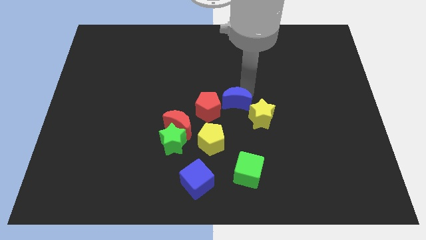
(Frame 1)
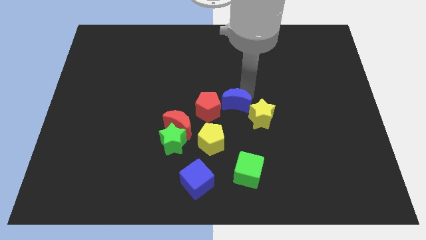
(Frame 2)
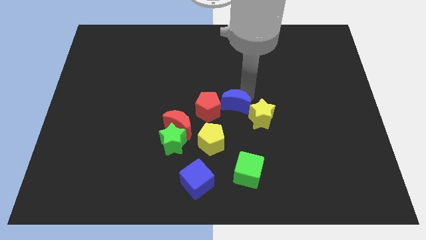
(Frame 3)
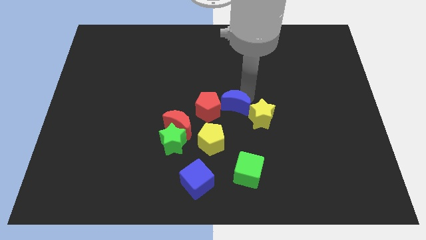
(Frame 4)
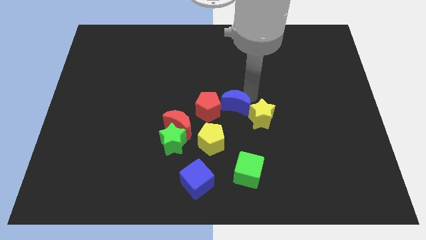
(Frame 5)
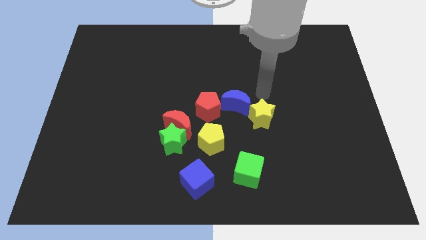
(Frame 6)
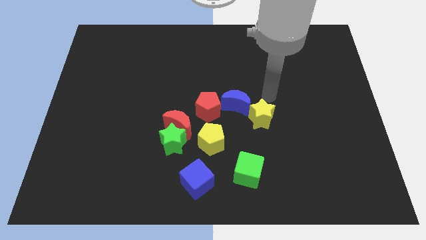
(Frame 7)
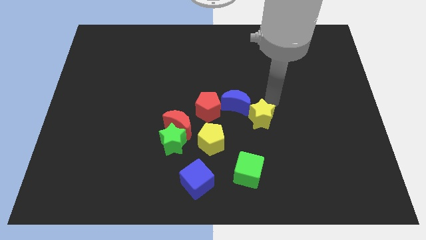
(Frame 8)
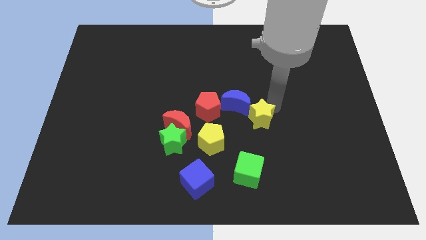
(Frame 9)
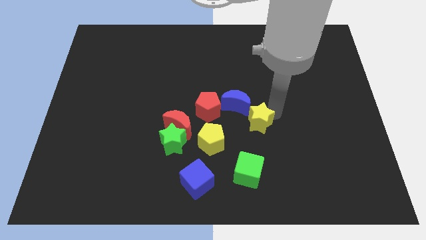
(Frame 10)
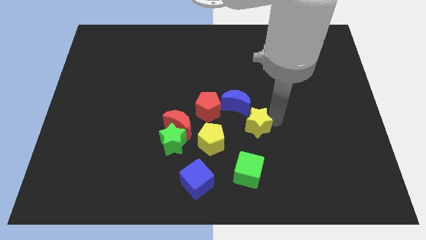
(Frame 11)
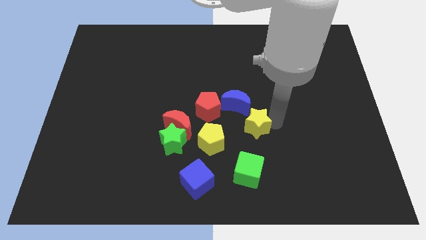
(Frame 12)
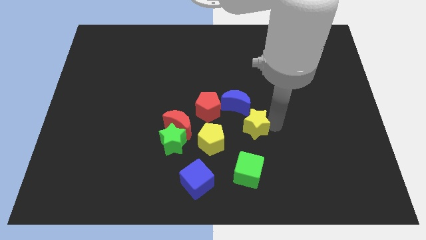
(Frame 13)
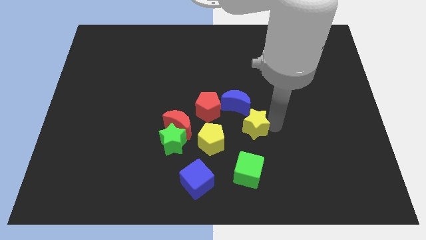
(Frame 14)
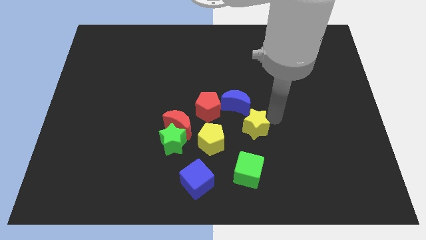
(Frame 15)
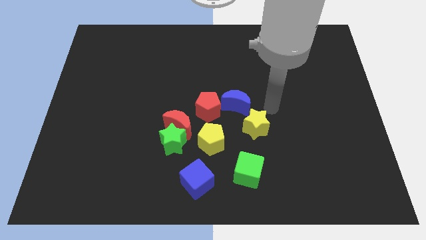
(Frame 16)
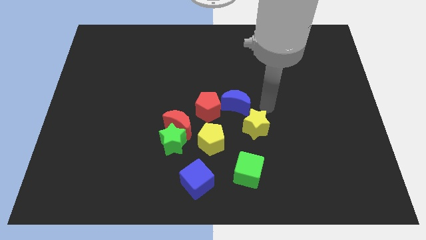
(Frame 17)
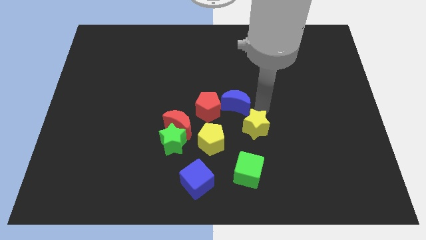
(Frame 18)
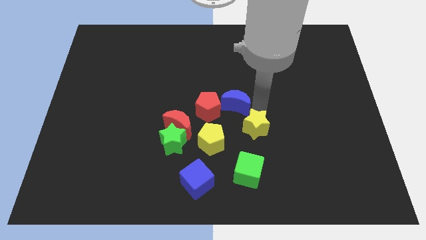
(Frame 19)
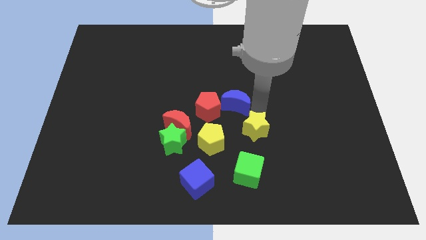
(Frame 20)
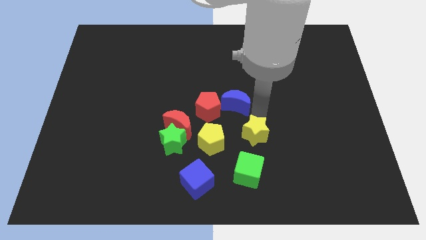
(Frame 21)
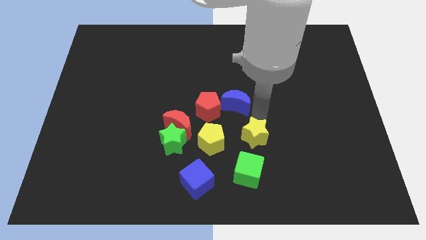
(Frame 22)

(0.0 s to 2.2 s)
push the yellow star closer to the green cube

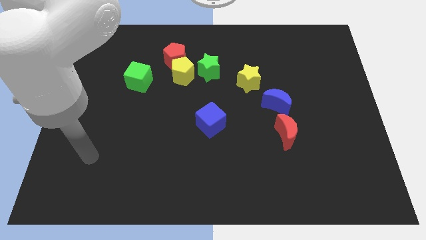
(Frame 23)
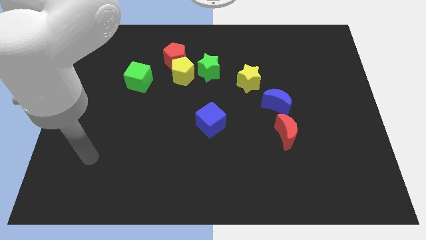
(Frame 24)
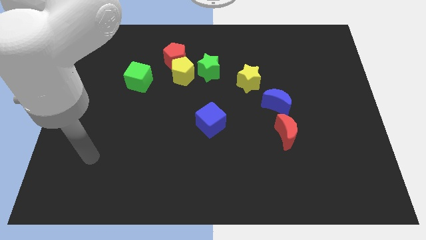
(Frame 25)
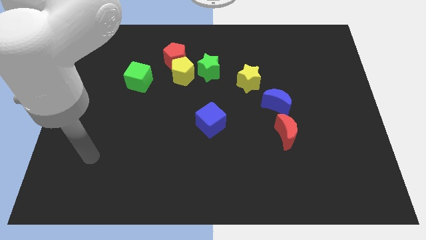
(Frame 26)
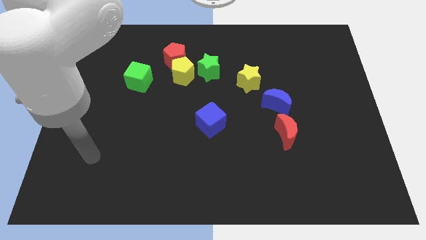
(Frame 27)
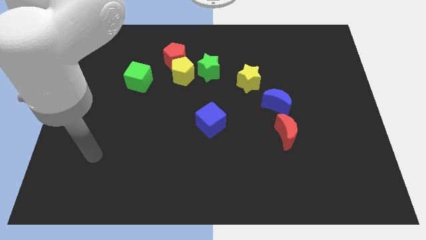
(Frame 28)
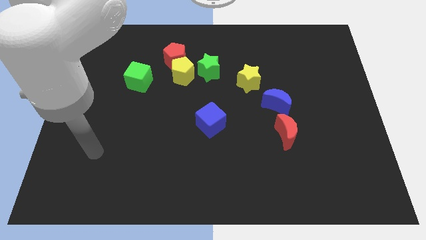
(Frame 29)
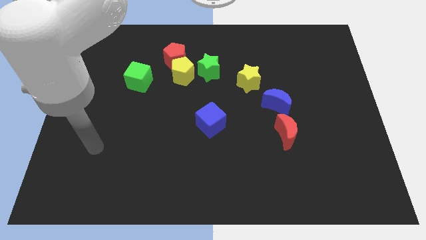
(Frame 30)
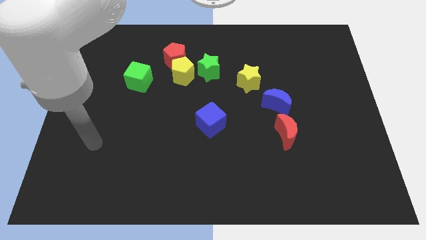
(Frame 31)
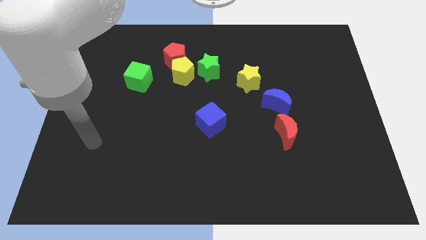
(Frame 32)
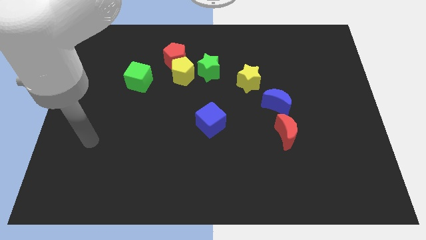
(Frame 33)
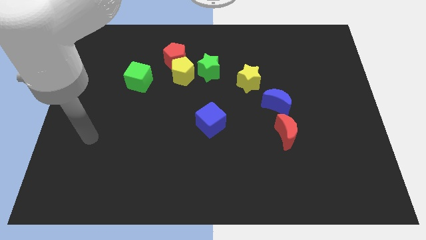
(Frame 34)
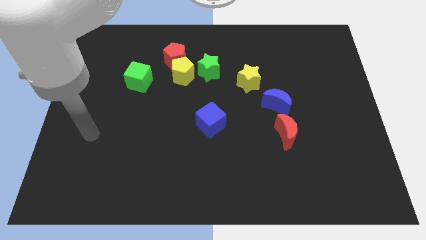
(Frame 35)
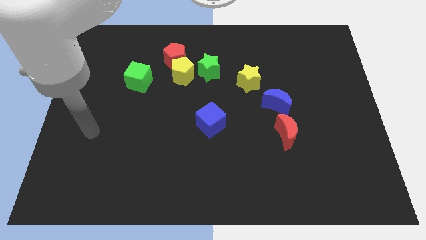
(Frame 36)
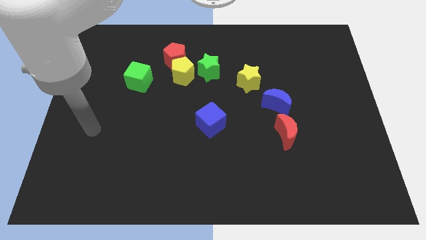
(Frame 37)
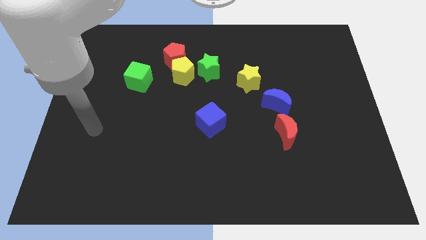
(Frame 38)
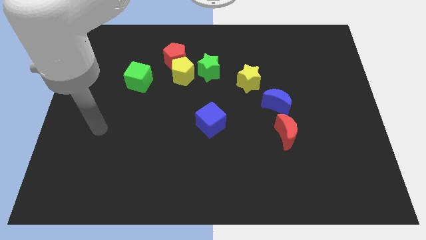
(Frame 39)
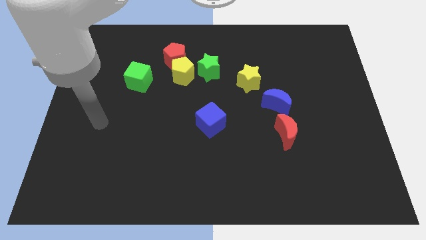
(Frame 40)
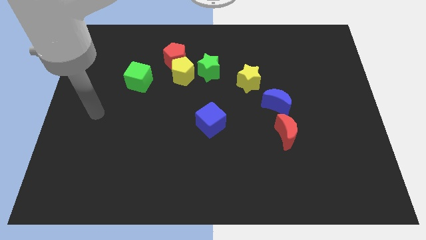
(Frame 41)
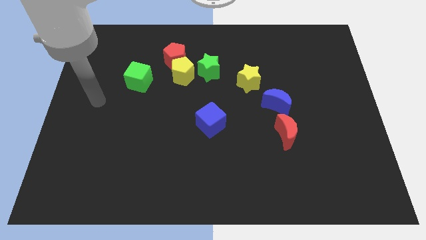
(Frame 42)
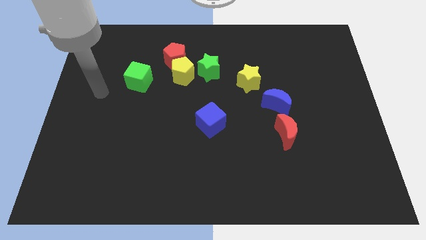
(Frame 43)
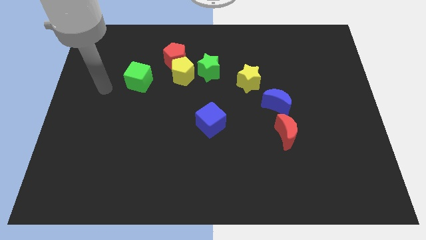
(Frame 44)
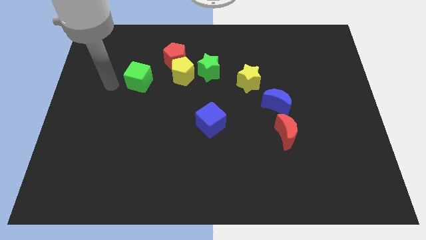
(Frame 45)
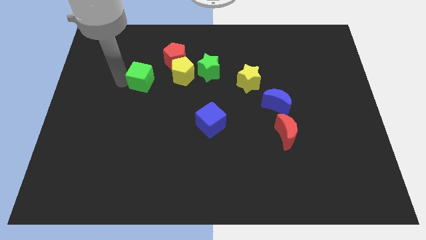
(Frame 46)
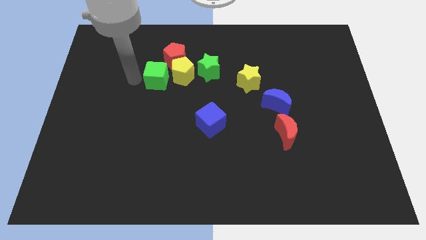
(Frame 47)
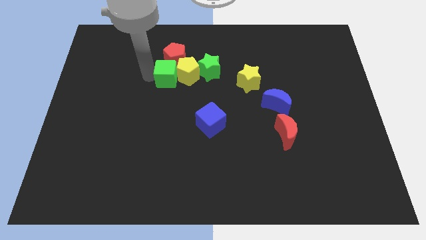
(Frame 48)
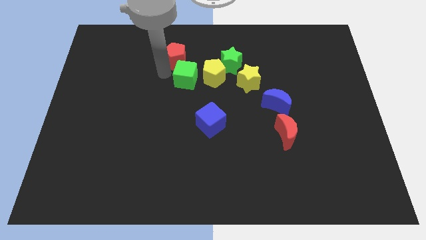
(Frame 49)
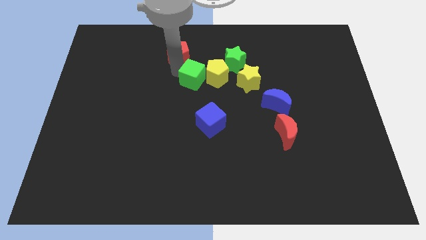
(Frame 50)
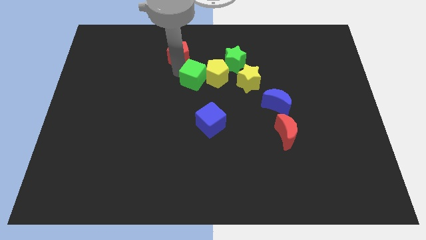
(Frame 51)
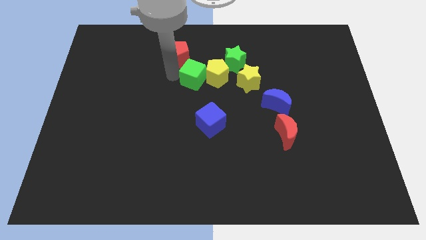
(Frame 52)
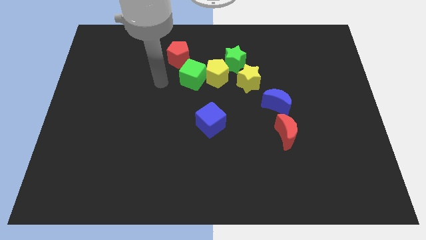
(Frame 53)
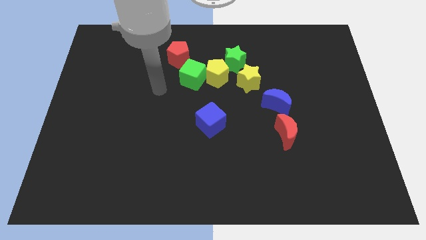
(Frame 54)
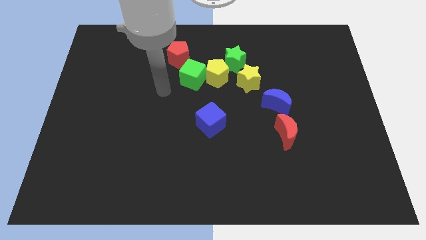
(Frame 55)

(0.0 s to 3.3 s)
push the green cube into the yellow pentagon

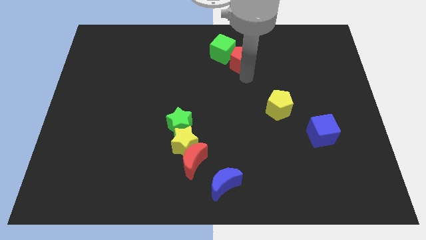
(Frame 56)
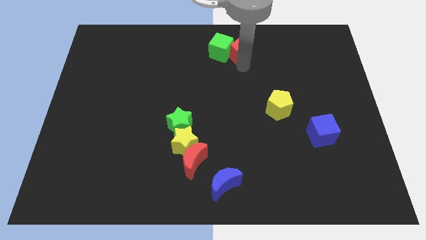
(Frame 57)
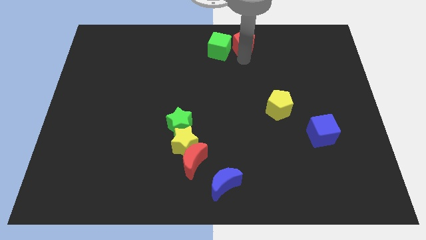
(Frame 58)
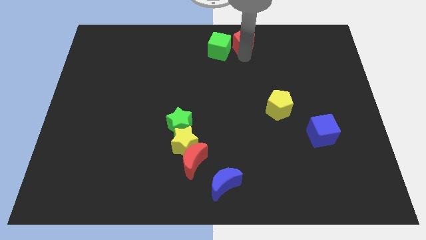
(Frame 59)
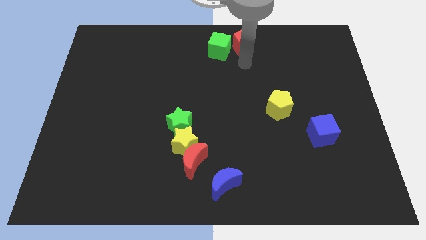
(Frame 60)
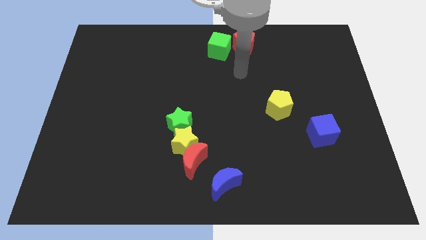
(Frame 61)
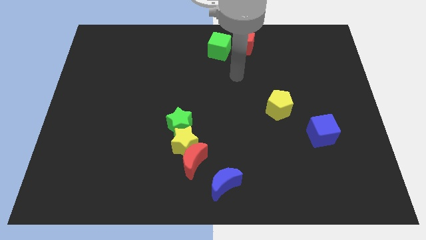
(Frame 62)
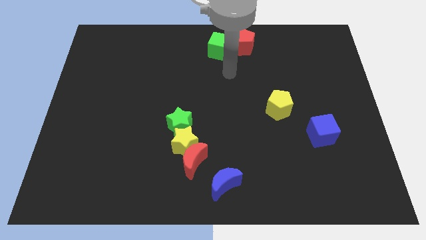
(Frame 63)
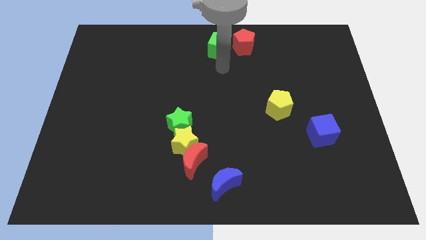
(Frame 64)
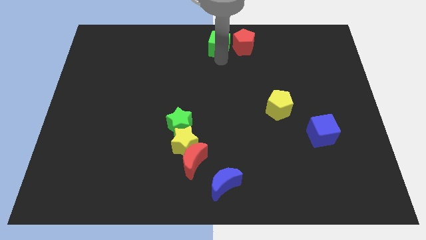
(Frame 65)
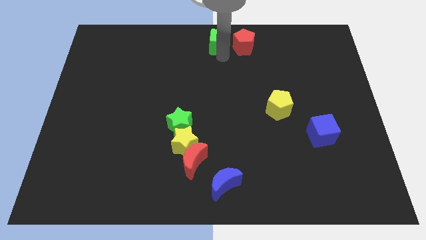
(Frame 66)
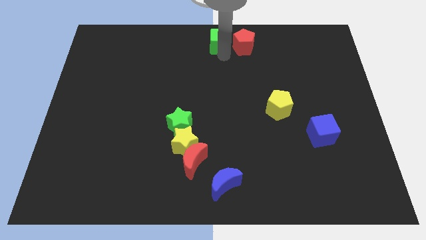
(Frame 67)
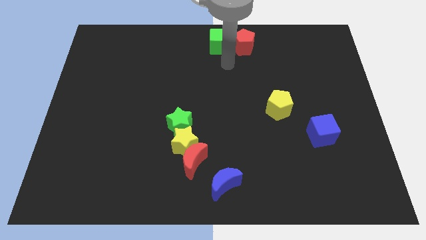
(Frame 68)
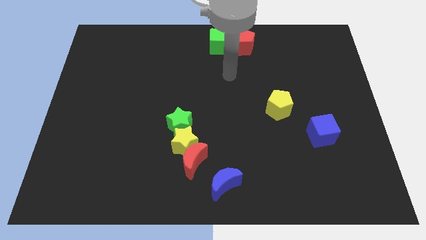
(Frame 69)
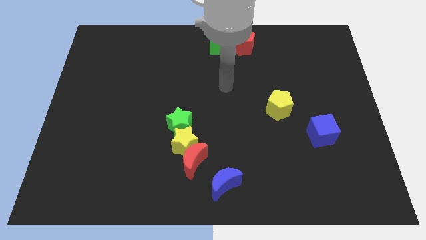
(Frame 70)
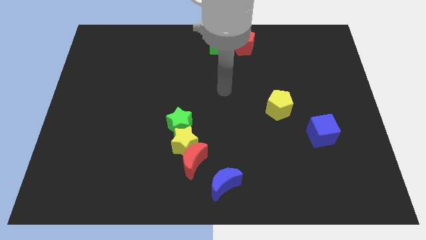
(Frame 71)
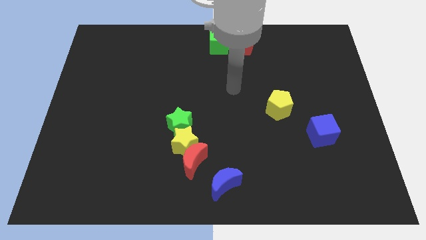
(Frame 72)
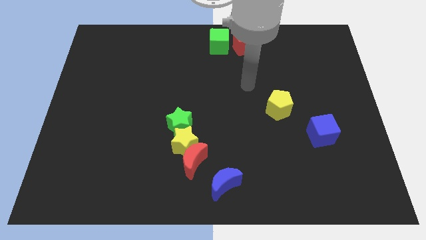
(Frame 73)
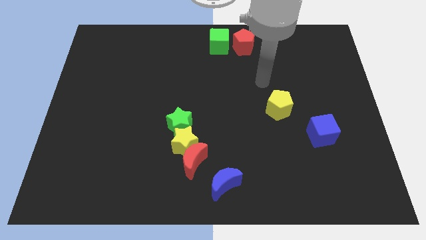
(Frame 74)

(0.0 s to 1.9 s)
slide the red pentagon and the green cube towards top center

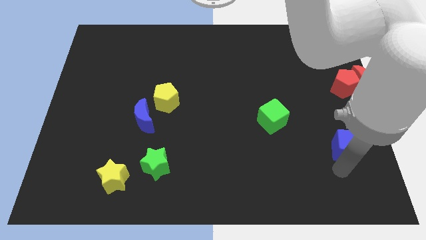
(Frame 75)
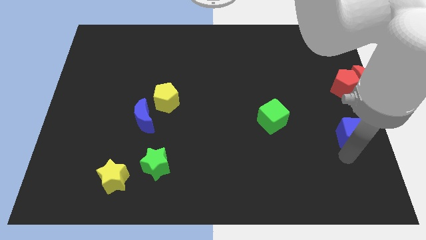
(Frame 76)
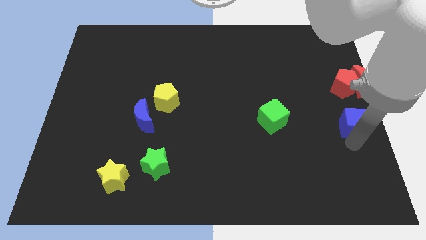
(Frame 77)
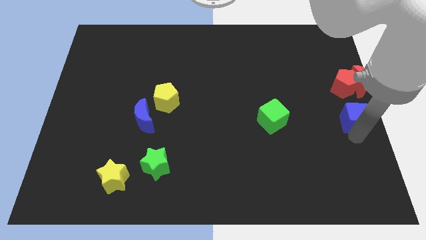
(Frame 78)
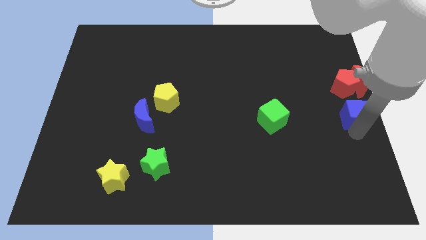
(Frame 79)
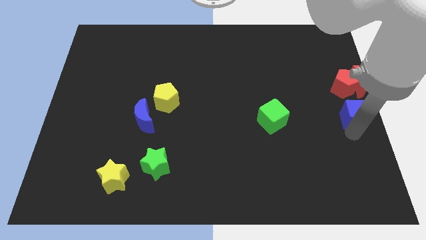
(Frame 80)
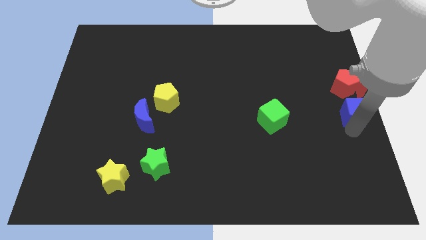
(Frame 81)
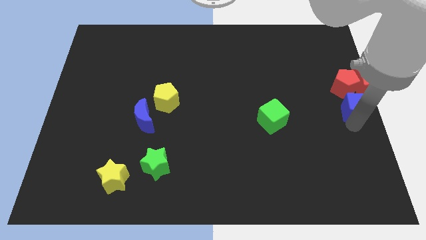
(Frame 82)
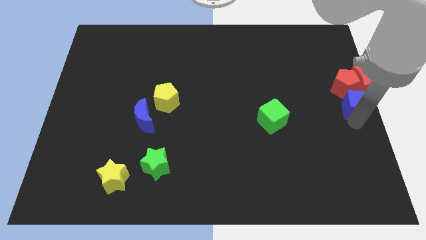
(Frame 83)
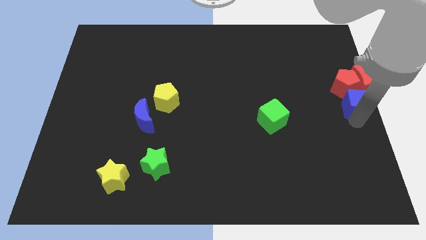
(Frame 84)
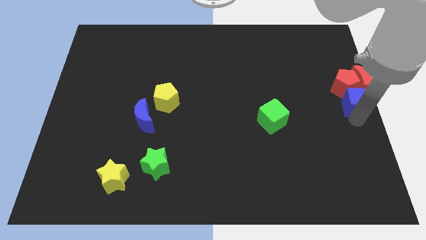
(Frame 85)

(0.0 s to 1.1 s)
move blue cube towards red blocks

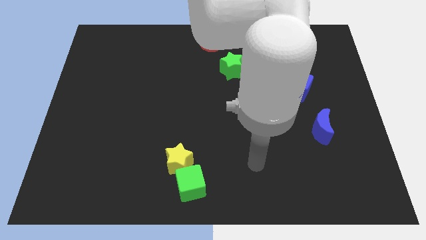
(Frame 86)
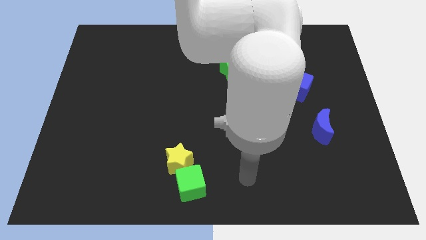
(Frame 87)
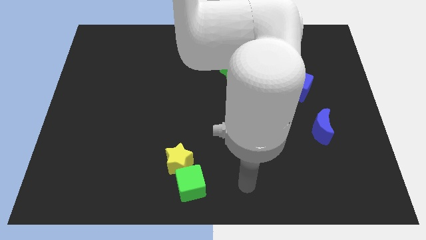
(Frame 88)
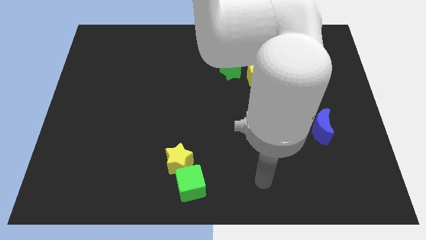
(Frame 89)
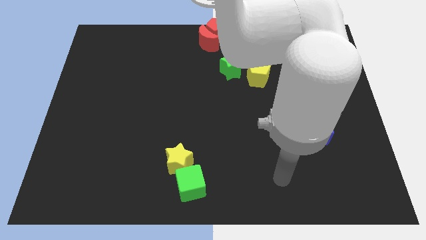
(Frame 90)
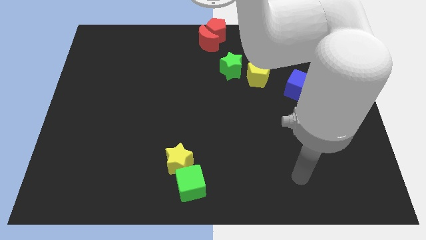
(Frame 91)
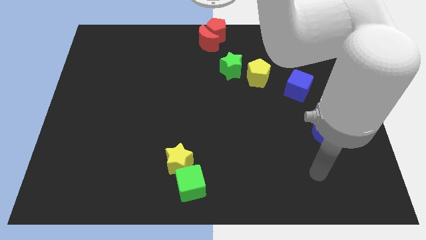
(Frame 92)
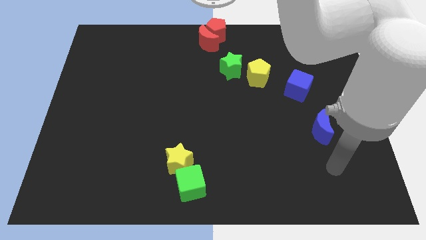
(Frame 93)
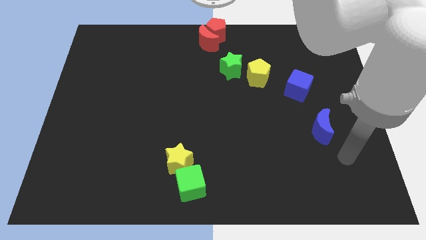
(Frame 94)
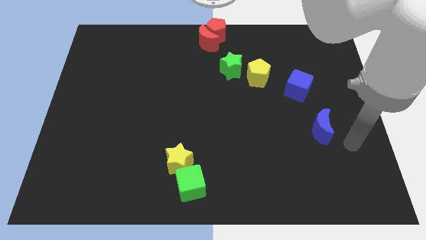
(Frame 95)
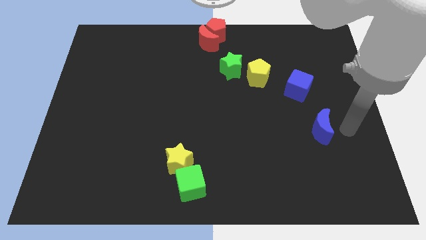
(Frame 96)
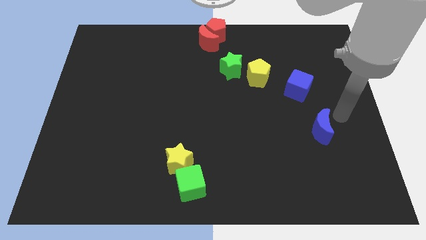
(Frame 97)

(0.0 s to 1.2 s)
point your arm at the right side of the blue crescent
